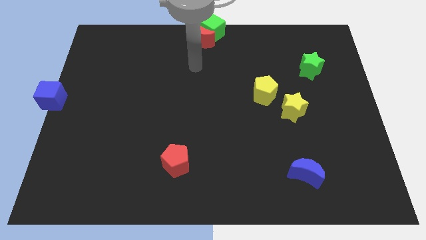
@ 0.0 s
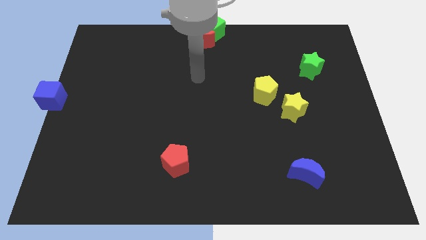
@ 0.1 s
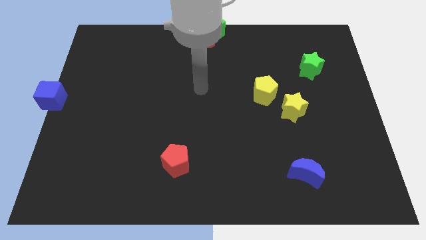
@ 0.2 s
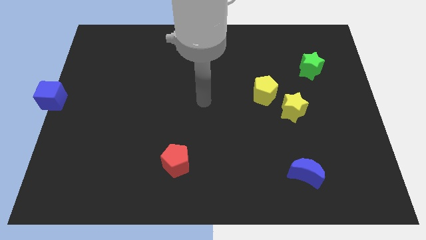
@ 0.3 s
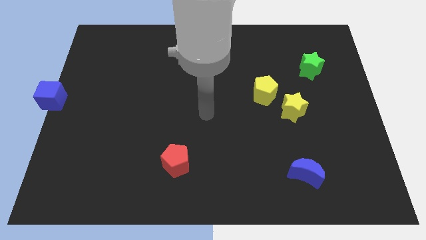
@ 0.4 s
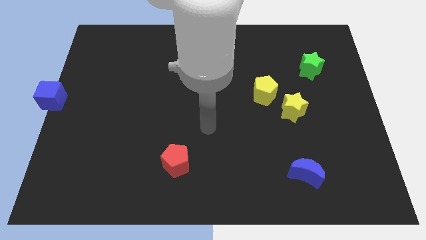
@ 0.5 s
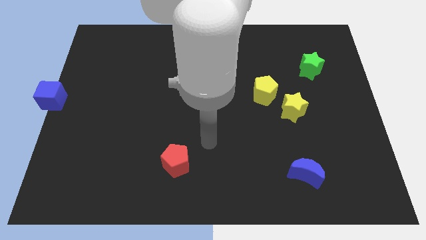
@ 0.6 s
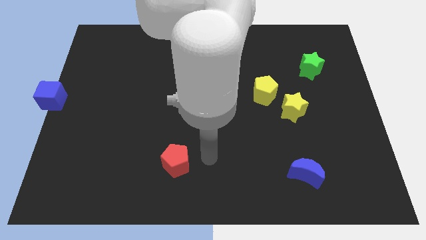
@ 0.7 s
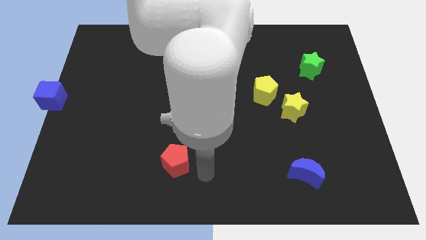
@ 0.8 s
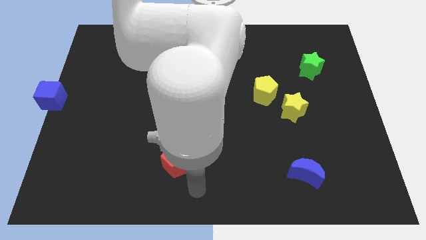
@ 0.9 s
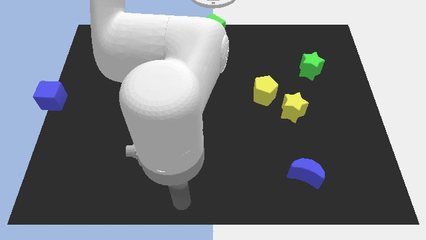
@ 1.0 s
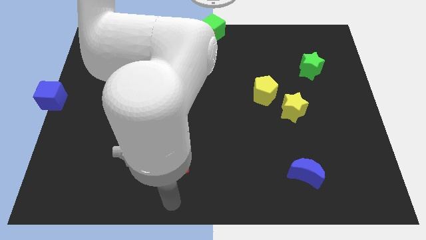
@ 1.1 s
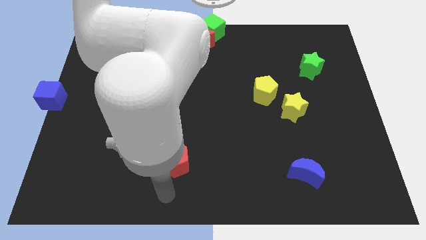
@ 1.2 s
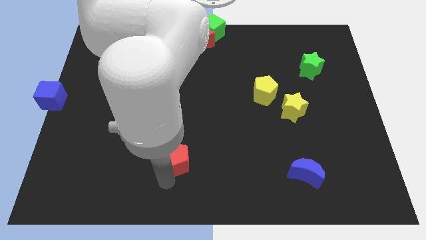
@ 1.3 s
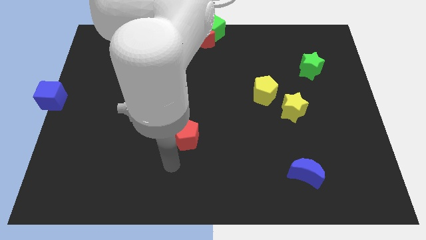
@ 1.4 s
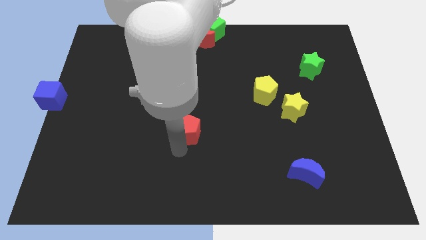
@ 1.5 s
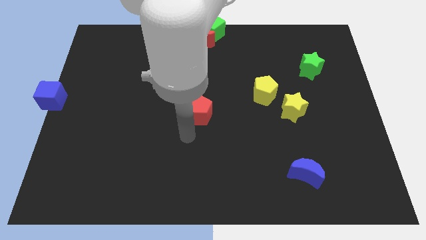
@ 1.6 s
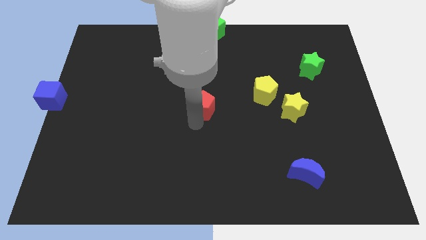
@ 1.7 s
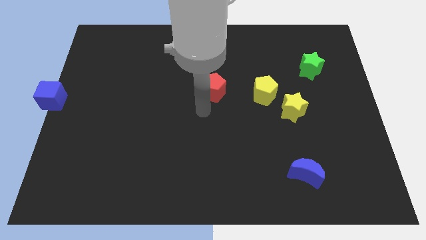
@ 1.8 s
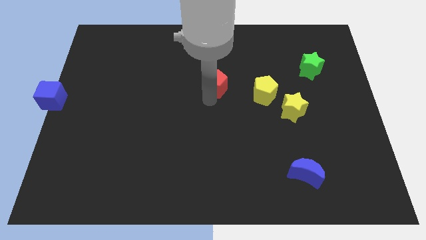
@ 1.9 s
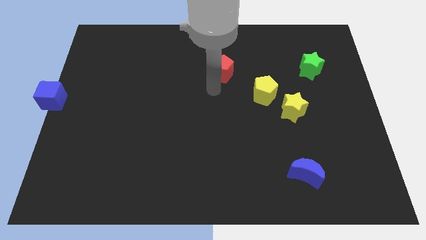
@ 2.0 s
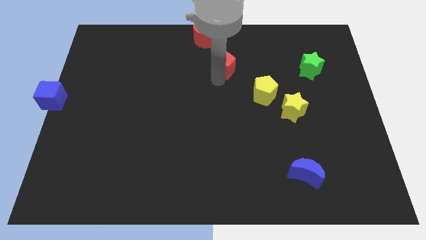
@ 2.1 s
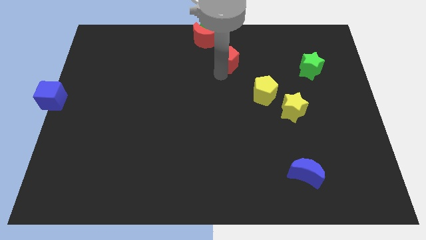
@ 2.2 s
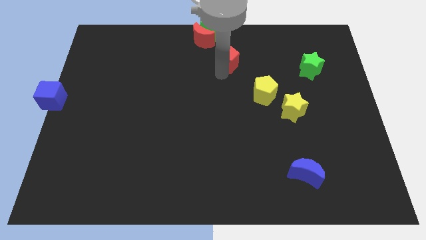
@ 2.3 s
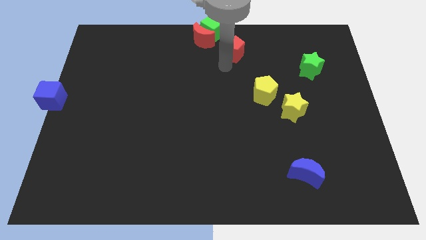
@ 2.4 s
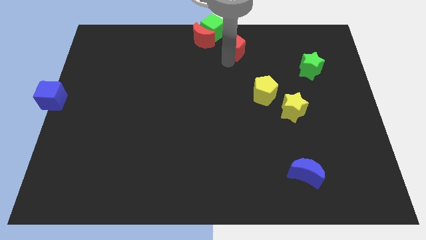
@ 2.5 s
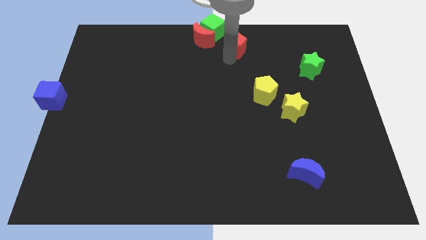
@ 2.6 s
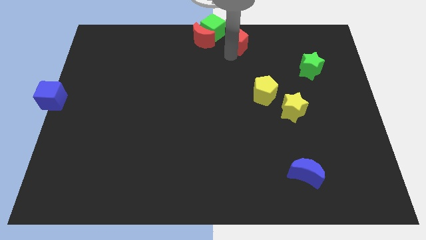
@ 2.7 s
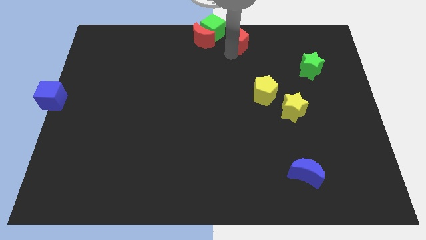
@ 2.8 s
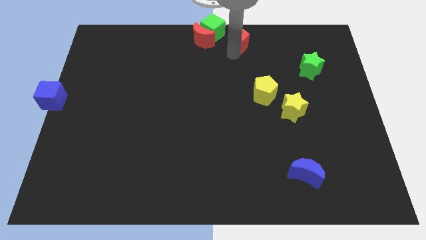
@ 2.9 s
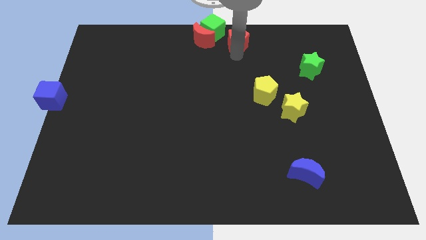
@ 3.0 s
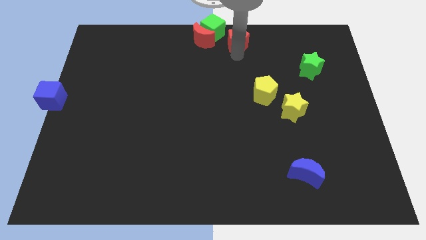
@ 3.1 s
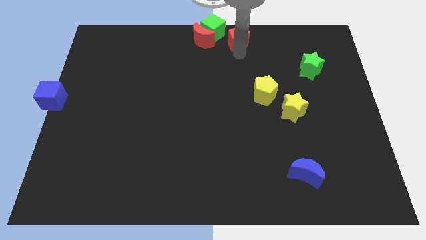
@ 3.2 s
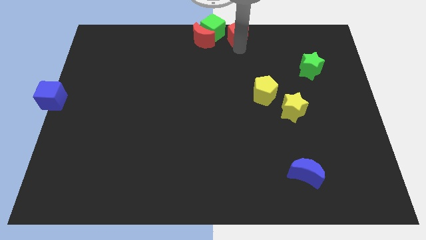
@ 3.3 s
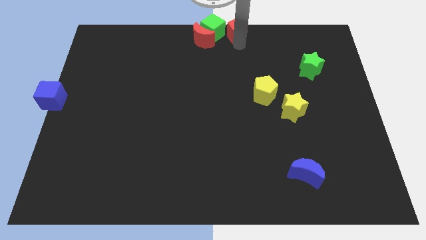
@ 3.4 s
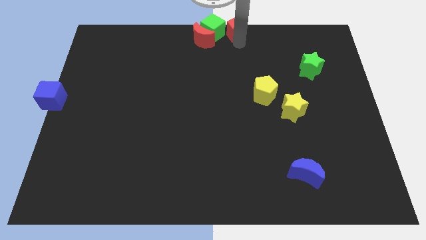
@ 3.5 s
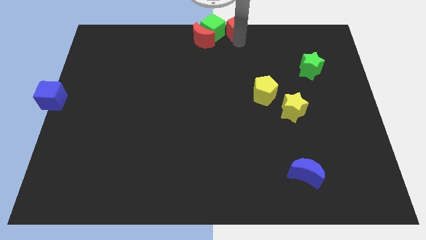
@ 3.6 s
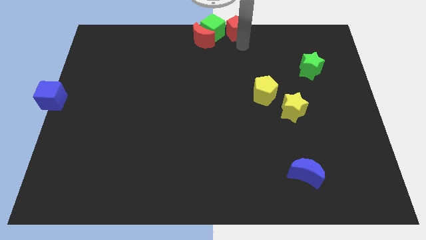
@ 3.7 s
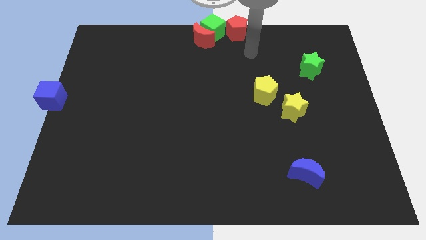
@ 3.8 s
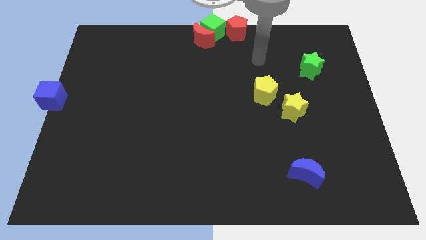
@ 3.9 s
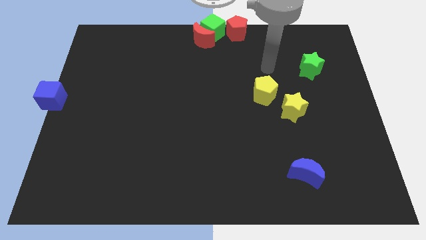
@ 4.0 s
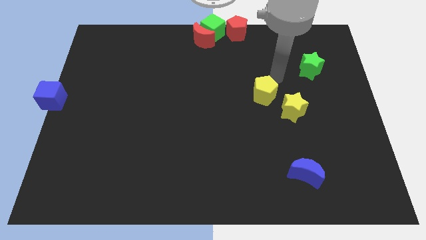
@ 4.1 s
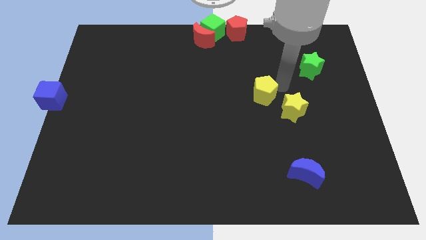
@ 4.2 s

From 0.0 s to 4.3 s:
place the red pentagon to the right of green cube

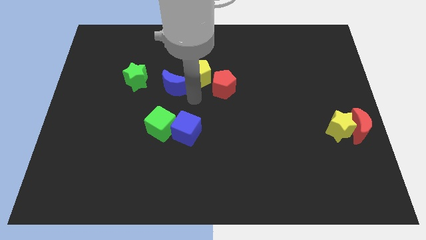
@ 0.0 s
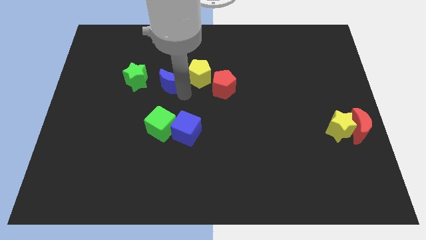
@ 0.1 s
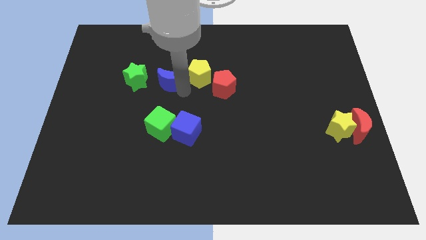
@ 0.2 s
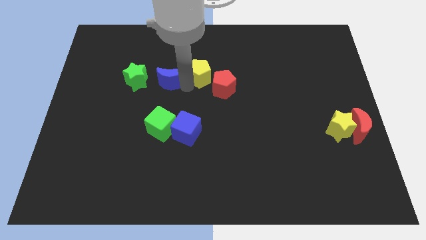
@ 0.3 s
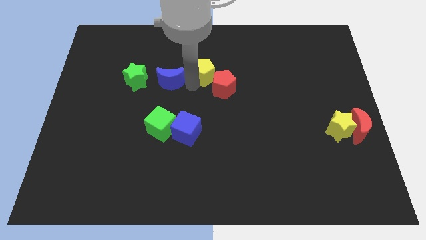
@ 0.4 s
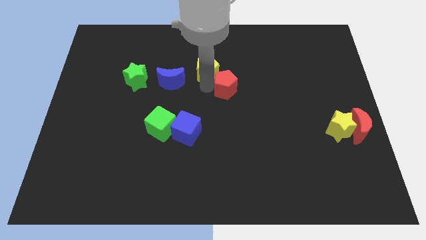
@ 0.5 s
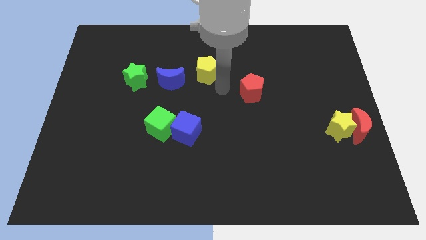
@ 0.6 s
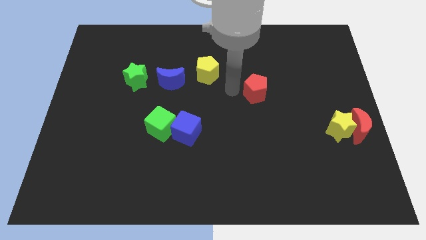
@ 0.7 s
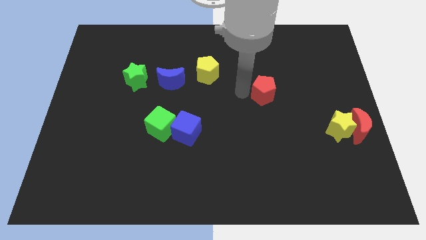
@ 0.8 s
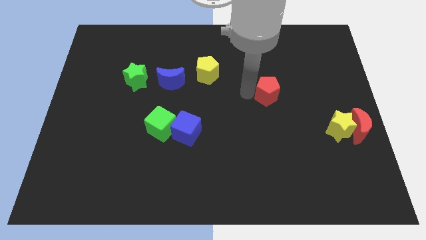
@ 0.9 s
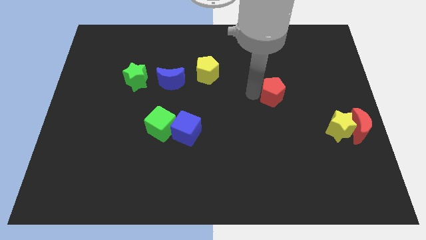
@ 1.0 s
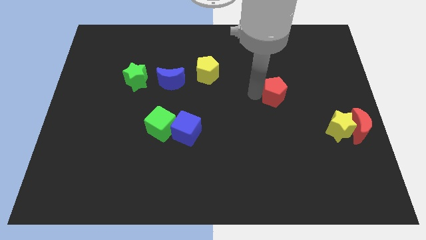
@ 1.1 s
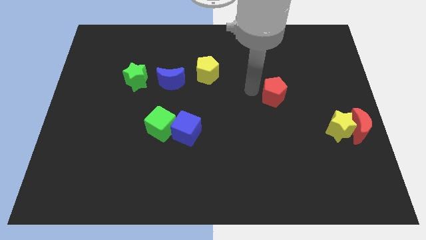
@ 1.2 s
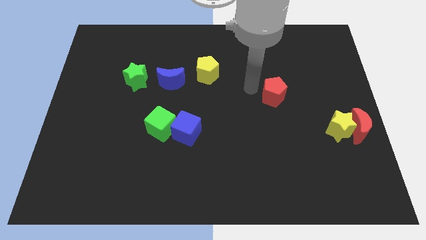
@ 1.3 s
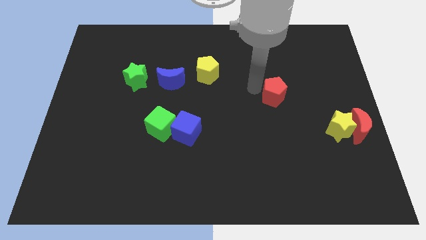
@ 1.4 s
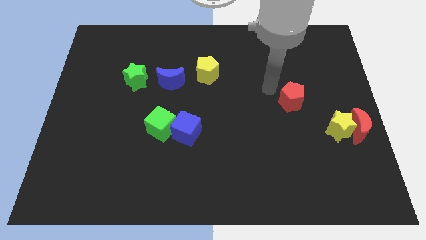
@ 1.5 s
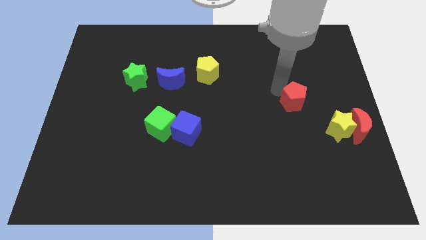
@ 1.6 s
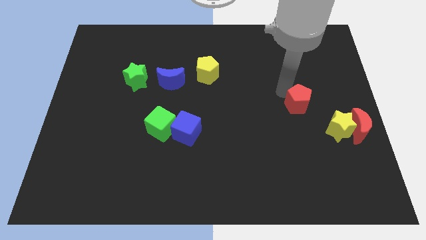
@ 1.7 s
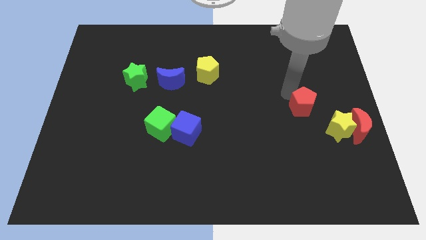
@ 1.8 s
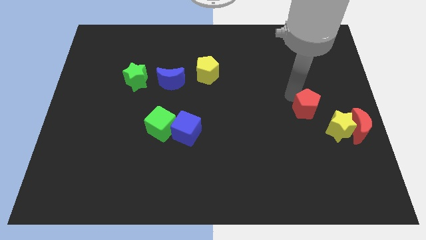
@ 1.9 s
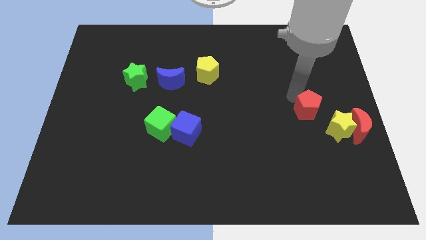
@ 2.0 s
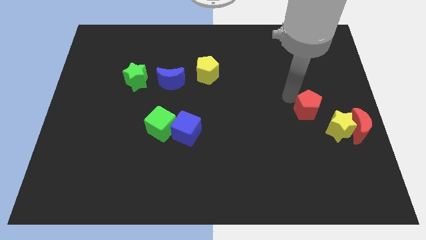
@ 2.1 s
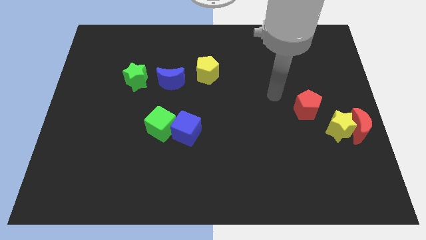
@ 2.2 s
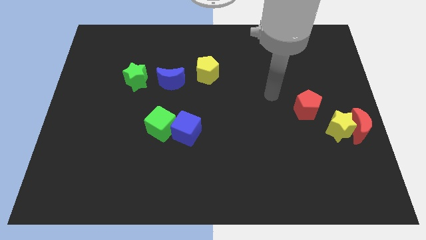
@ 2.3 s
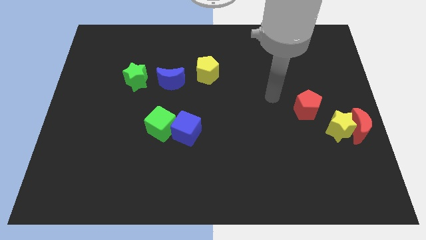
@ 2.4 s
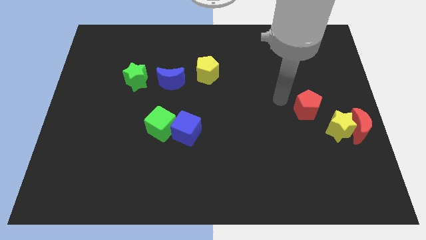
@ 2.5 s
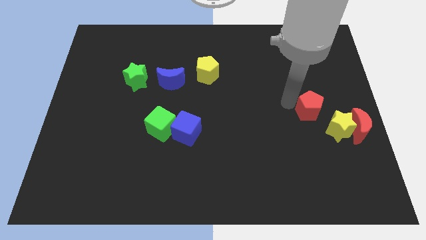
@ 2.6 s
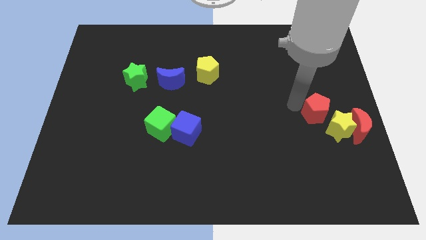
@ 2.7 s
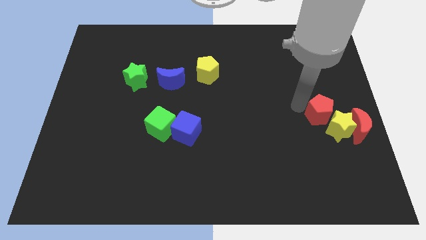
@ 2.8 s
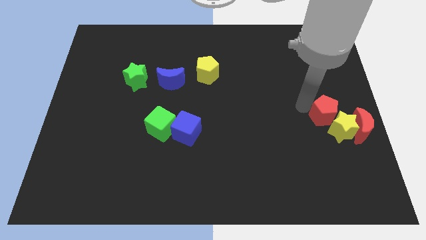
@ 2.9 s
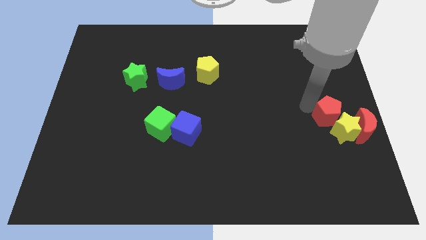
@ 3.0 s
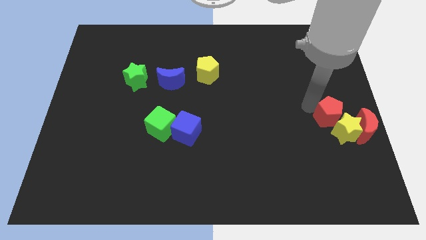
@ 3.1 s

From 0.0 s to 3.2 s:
place red pentagon near yellow star

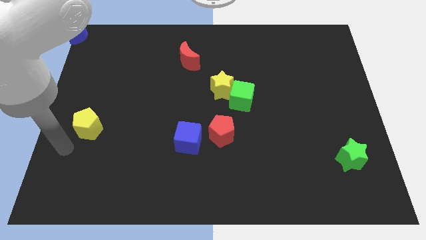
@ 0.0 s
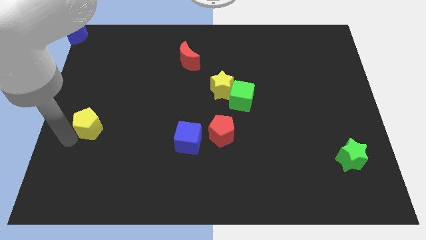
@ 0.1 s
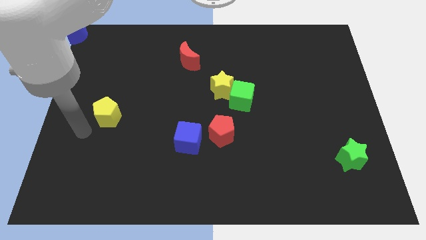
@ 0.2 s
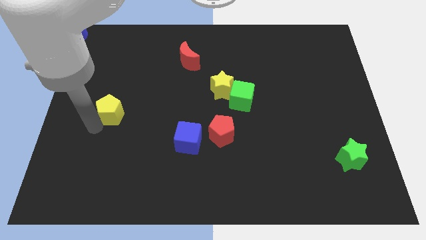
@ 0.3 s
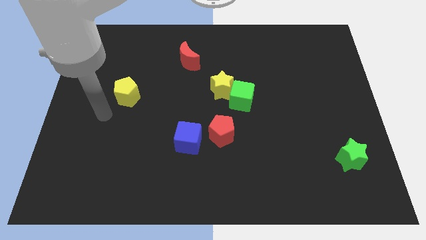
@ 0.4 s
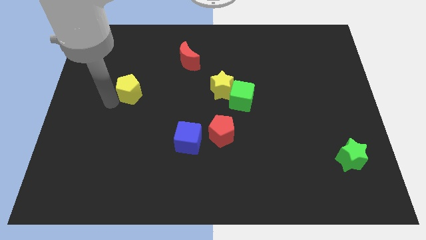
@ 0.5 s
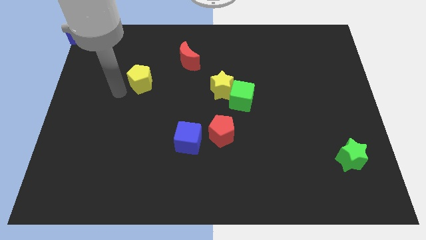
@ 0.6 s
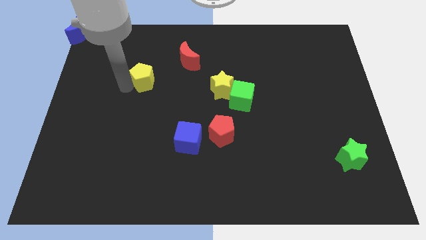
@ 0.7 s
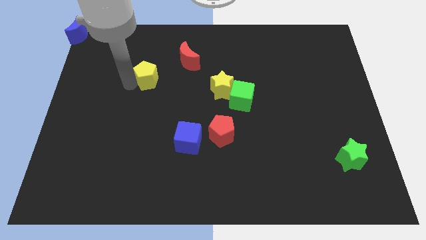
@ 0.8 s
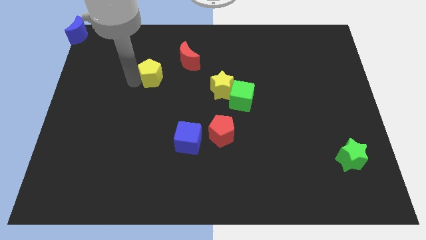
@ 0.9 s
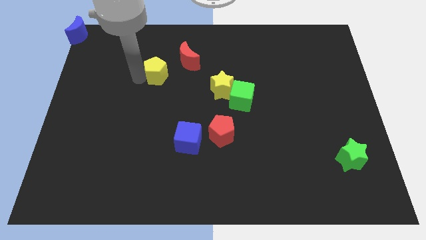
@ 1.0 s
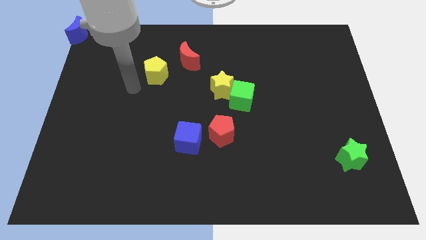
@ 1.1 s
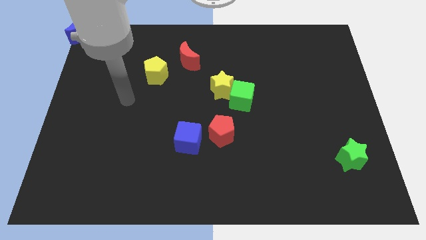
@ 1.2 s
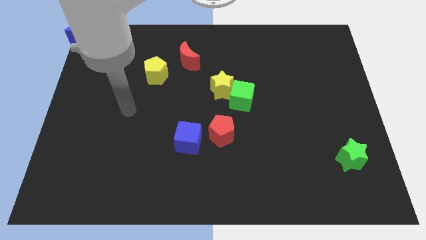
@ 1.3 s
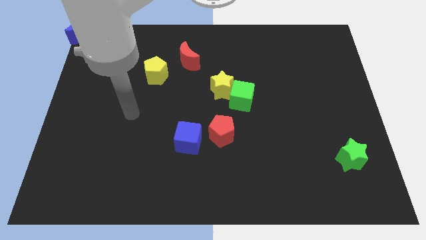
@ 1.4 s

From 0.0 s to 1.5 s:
move the yellow pentagon diagonal to the red pentagon

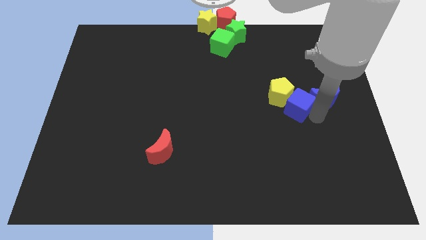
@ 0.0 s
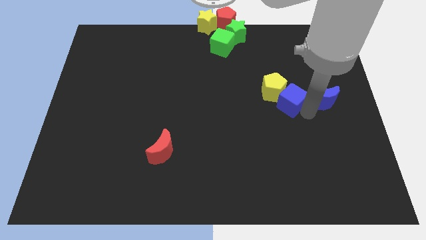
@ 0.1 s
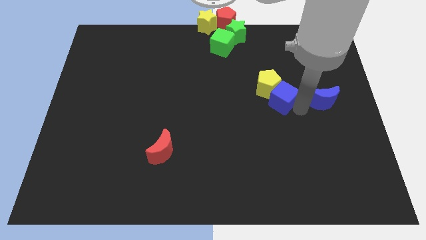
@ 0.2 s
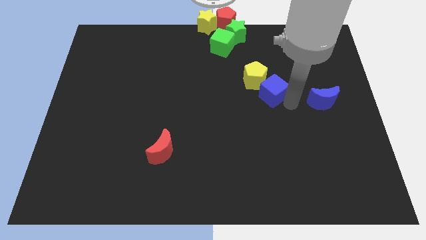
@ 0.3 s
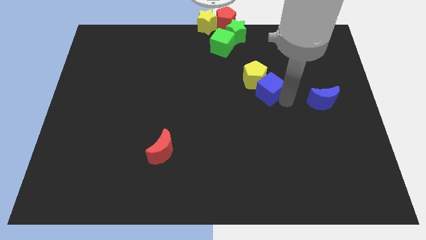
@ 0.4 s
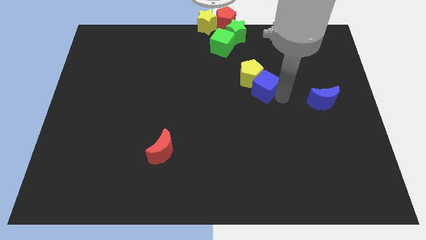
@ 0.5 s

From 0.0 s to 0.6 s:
push the blue cube along with yellow pentagon towards the top left to the board
